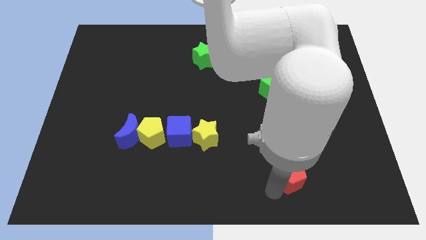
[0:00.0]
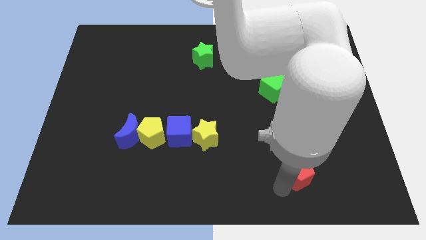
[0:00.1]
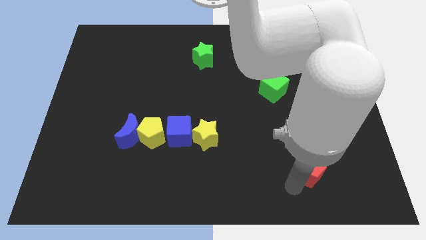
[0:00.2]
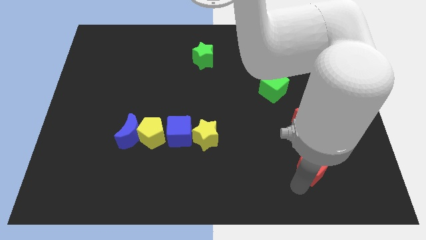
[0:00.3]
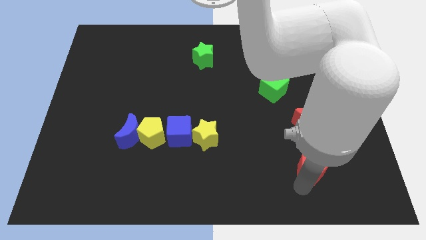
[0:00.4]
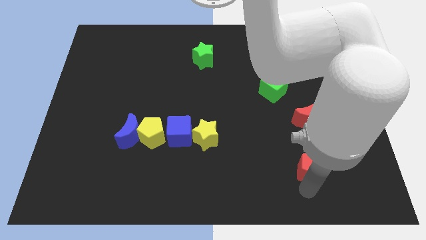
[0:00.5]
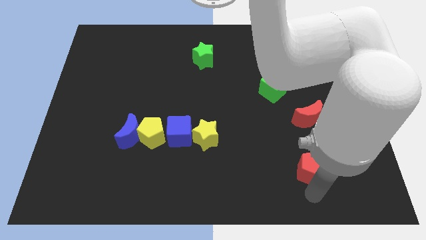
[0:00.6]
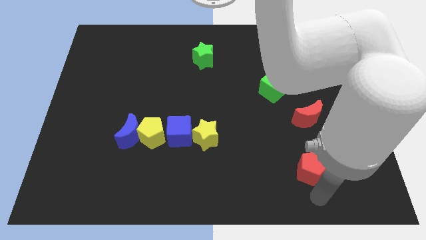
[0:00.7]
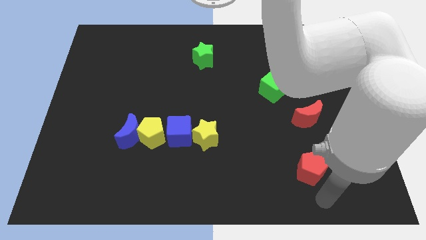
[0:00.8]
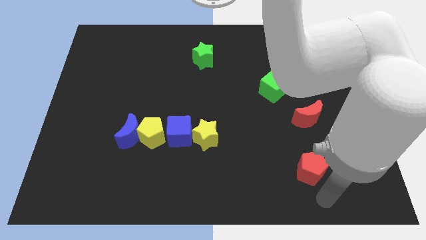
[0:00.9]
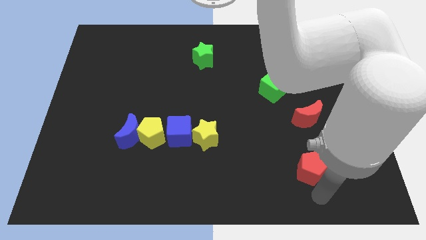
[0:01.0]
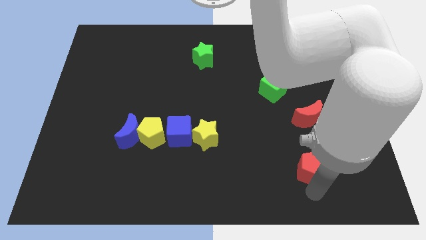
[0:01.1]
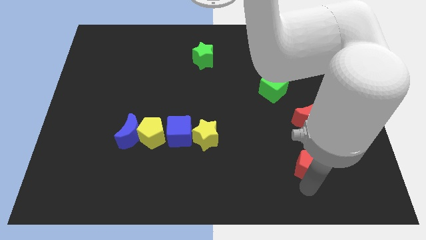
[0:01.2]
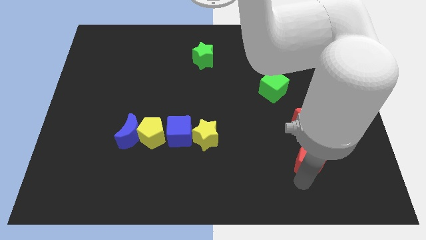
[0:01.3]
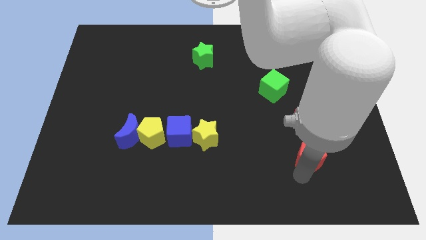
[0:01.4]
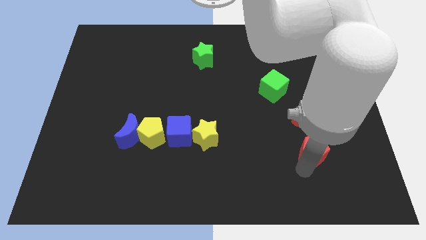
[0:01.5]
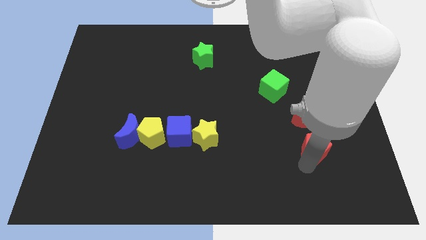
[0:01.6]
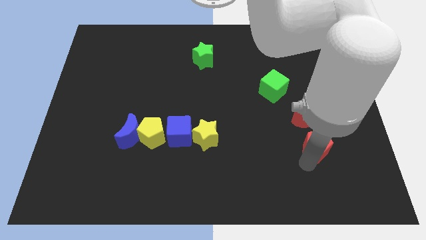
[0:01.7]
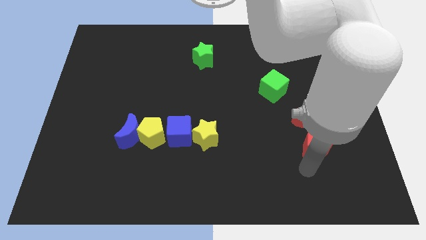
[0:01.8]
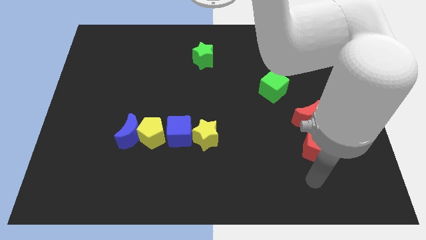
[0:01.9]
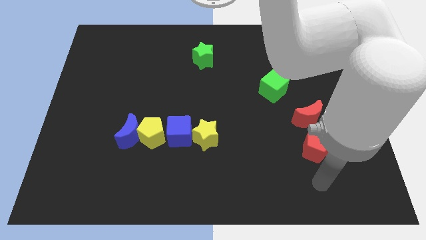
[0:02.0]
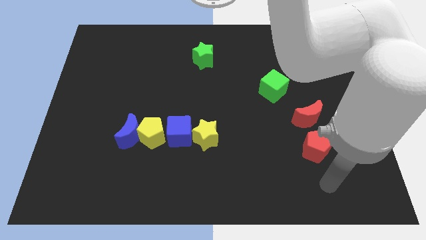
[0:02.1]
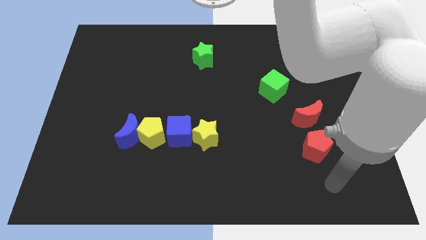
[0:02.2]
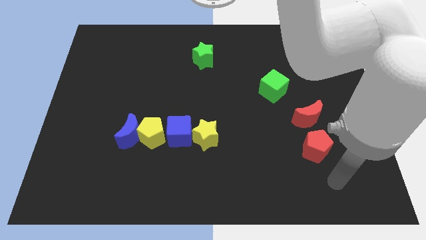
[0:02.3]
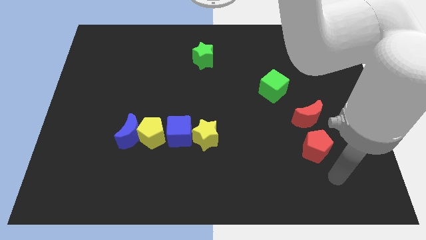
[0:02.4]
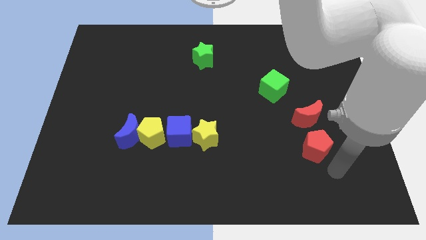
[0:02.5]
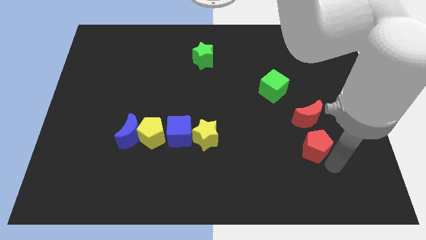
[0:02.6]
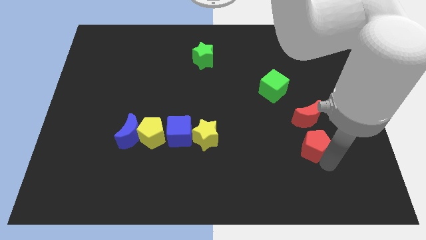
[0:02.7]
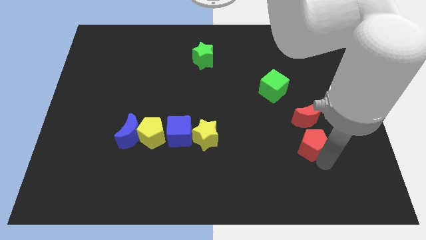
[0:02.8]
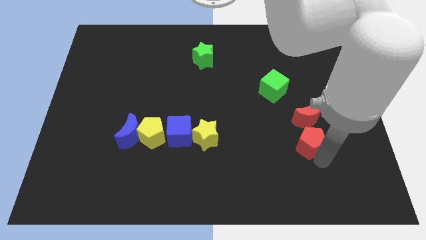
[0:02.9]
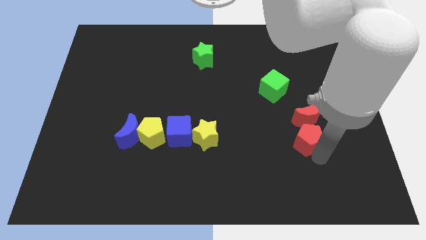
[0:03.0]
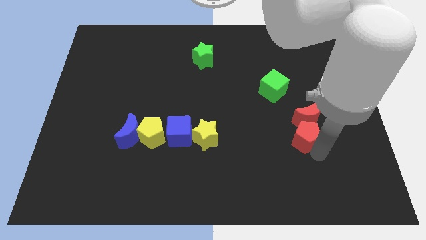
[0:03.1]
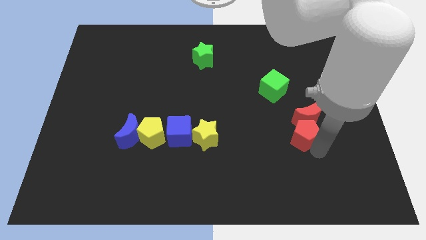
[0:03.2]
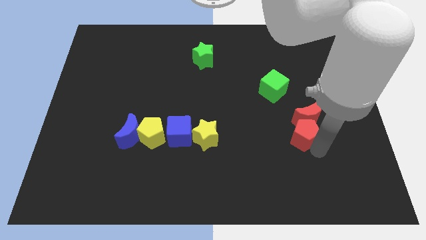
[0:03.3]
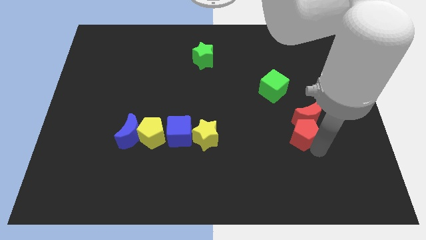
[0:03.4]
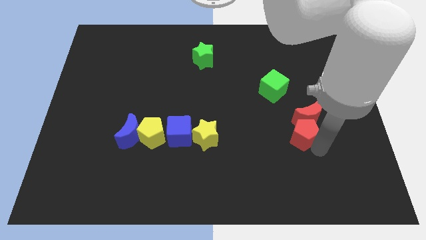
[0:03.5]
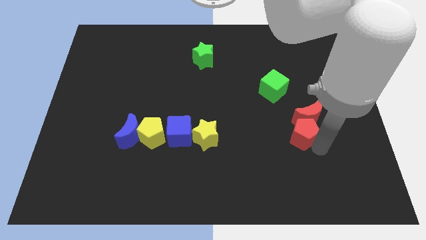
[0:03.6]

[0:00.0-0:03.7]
place red pentagon below red moon

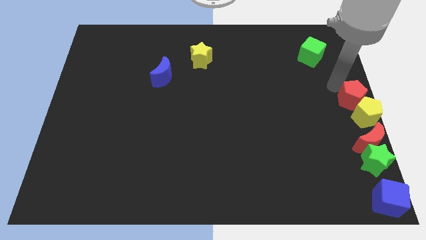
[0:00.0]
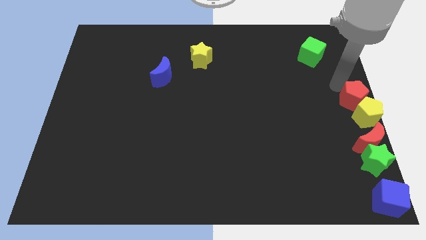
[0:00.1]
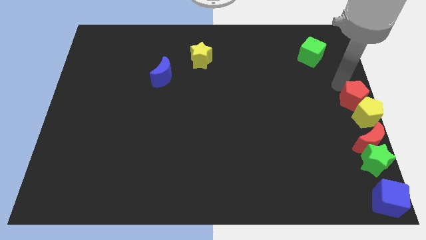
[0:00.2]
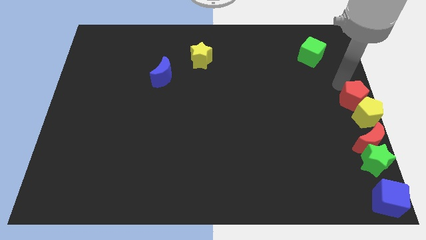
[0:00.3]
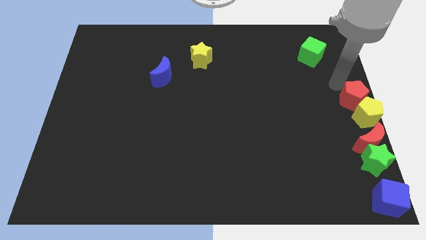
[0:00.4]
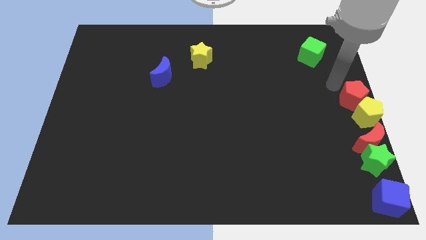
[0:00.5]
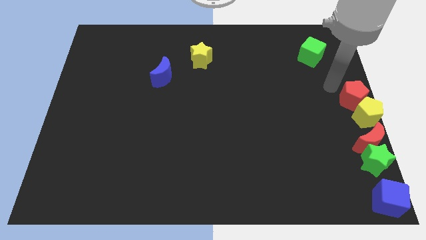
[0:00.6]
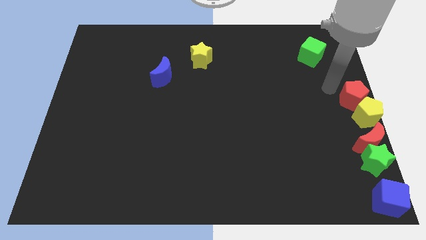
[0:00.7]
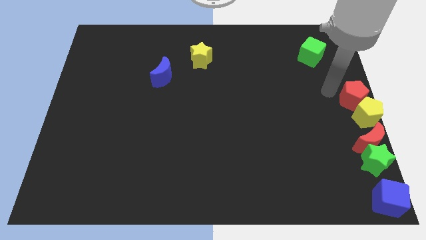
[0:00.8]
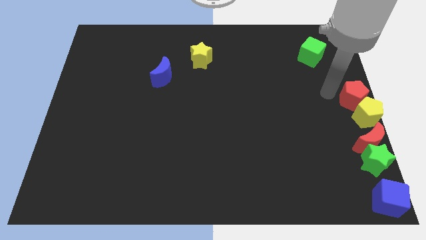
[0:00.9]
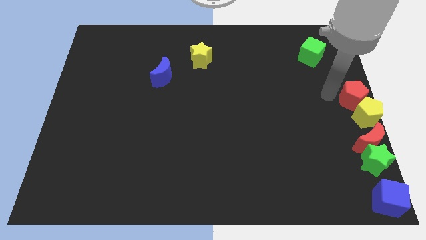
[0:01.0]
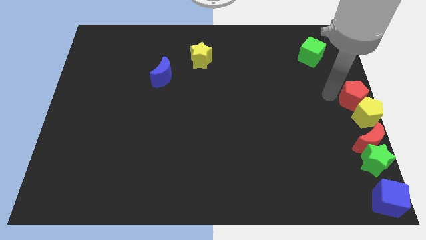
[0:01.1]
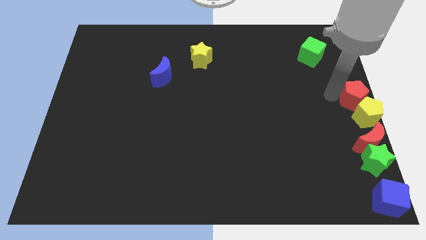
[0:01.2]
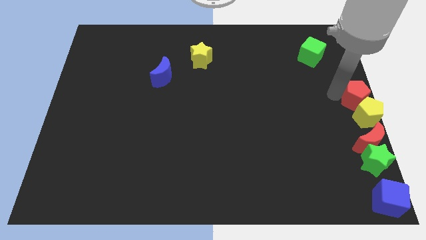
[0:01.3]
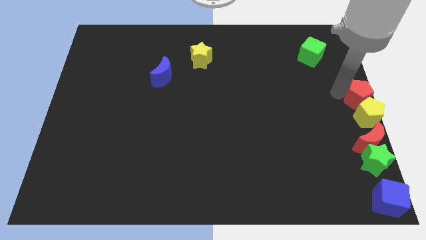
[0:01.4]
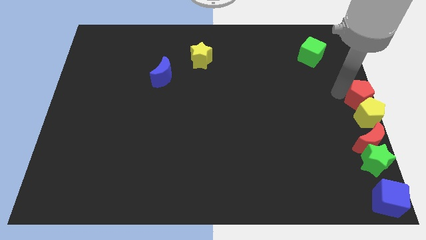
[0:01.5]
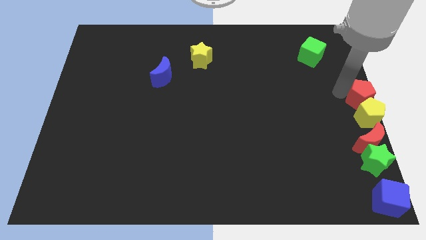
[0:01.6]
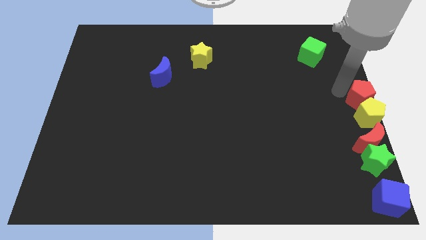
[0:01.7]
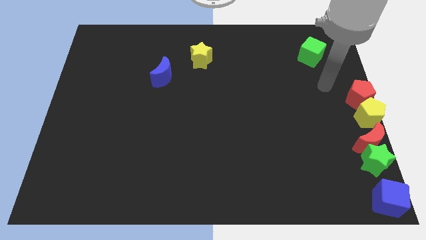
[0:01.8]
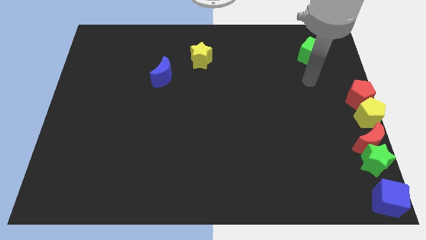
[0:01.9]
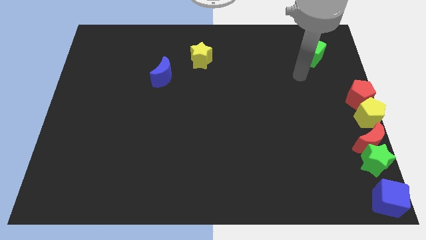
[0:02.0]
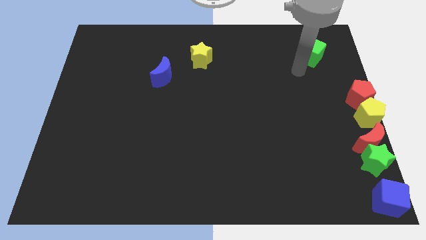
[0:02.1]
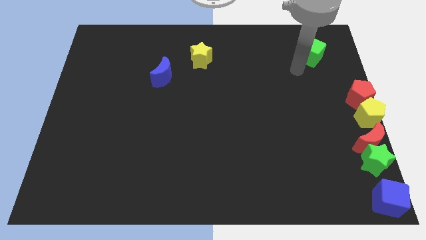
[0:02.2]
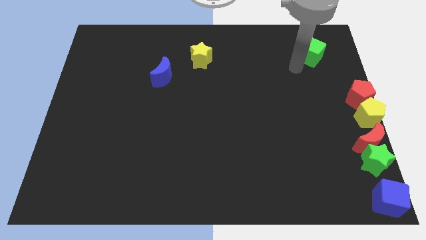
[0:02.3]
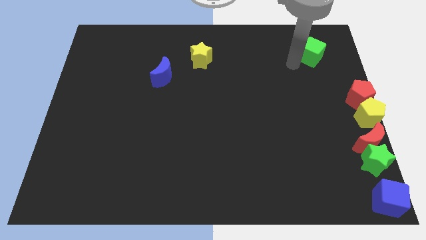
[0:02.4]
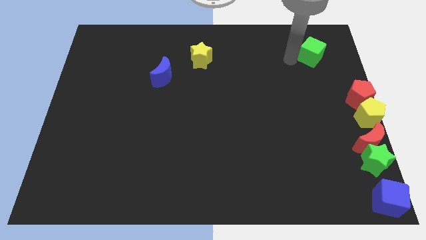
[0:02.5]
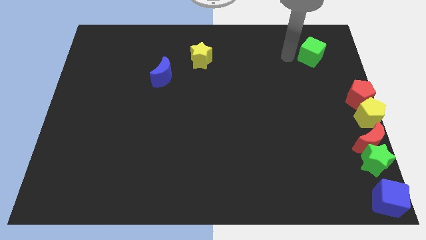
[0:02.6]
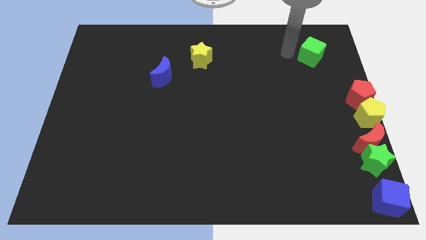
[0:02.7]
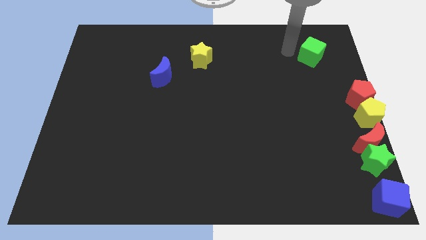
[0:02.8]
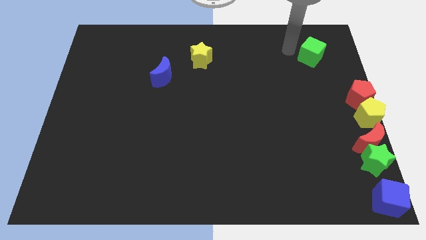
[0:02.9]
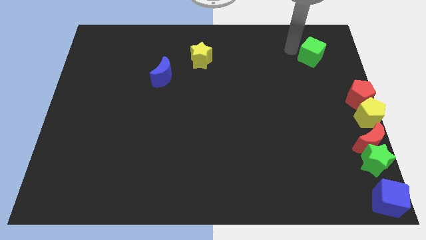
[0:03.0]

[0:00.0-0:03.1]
move red pentagon above the yellow pentagon

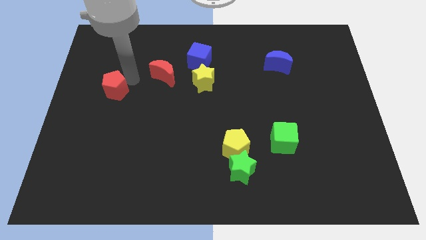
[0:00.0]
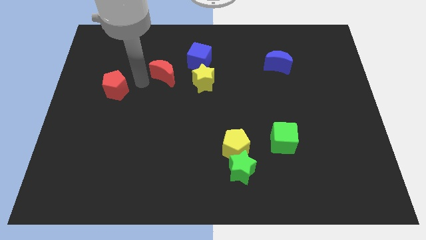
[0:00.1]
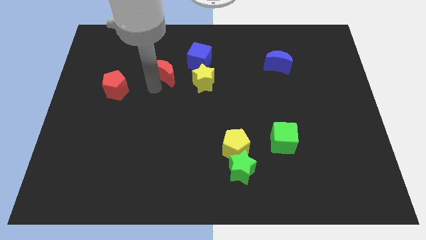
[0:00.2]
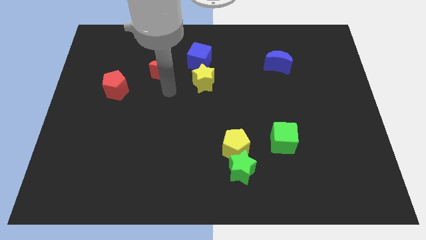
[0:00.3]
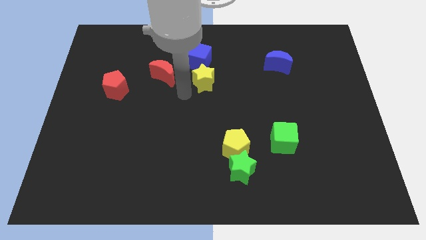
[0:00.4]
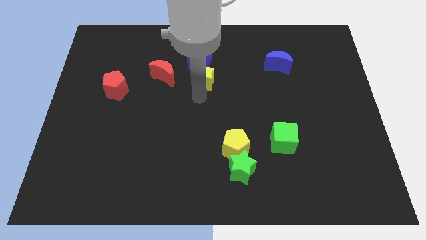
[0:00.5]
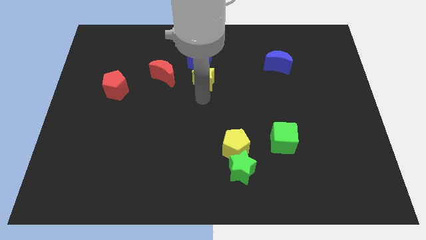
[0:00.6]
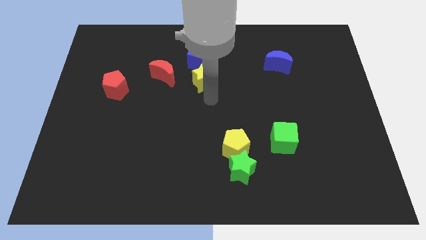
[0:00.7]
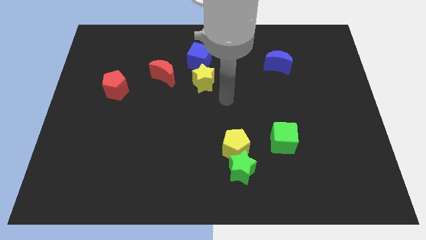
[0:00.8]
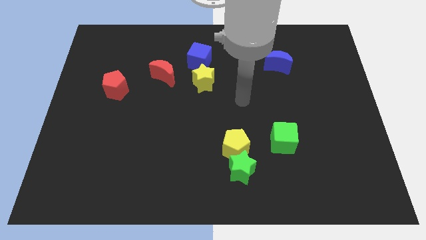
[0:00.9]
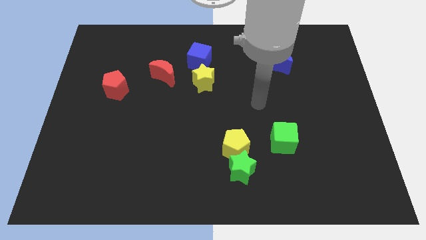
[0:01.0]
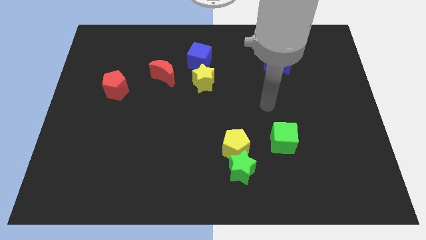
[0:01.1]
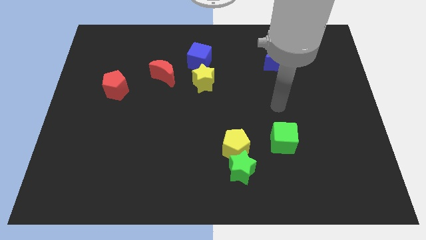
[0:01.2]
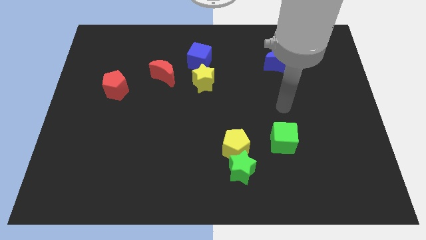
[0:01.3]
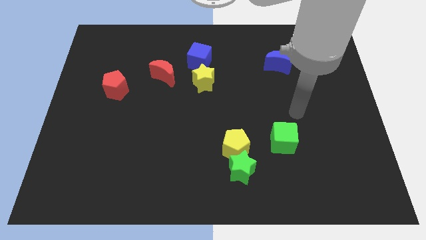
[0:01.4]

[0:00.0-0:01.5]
move the arm above the green cube

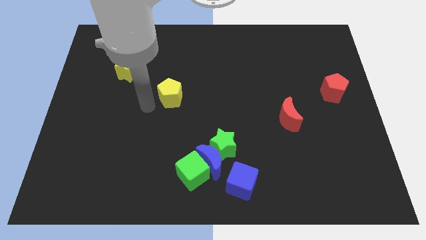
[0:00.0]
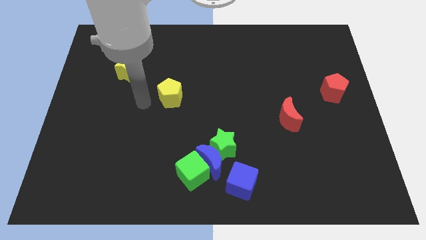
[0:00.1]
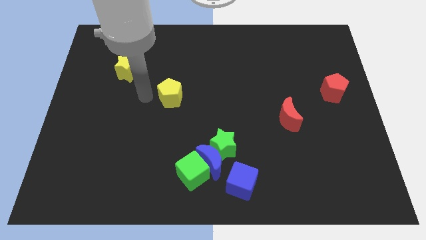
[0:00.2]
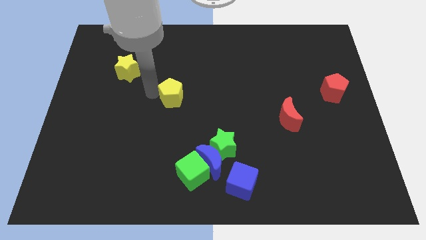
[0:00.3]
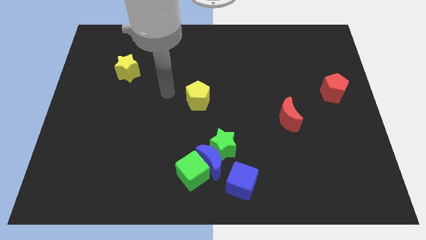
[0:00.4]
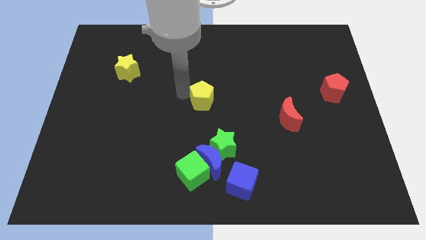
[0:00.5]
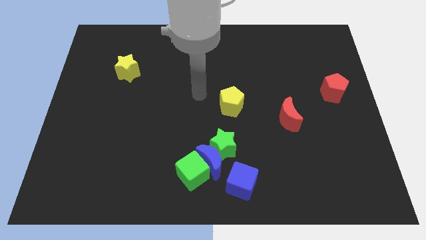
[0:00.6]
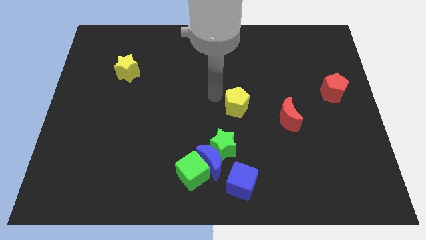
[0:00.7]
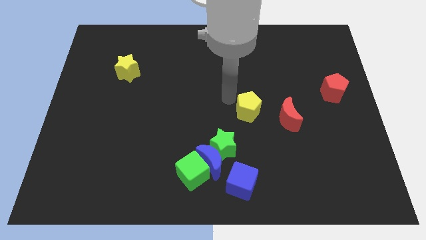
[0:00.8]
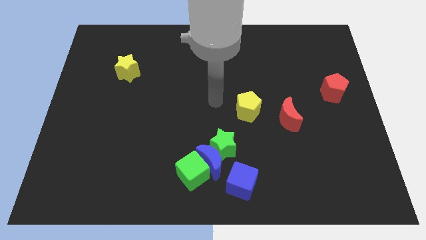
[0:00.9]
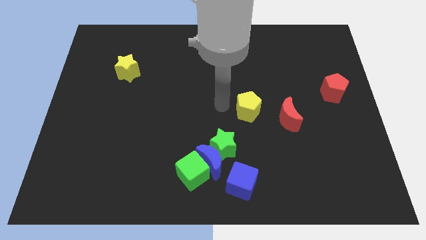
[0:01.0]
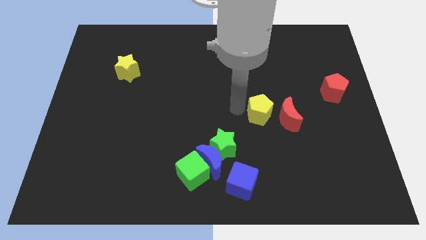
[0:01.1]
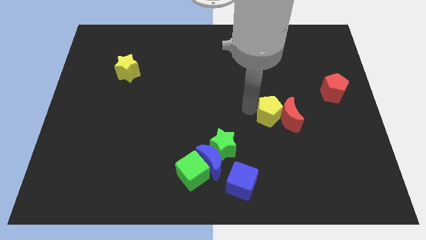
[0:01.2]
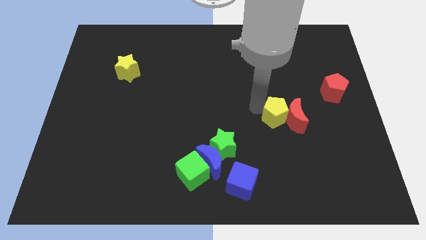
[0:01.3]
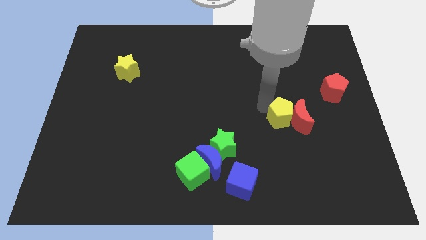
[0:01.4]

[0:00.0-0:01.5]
move the yellow pentagon into the red moon
